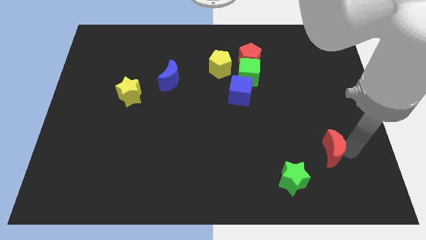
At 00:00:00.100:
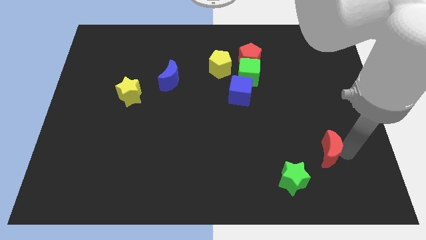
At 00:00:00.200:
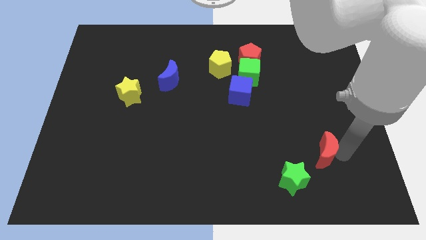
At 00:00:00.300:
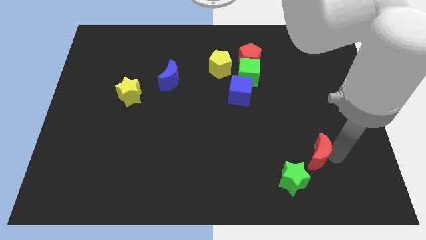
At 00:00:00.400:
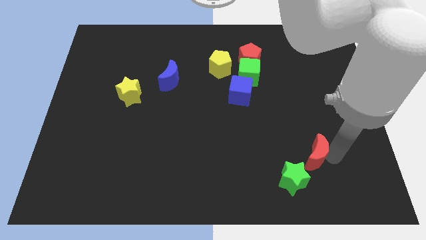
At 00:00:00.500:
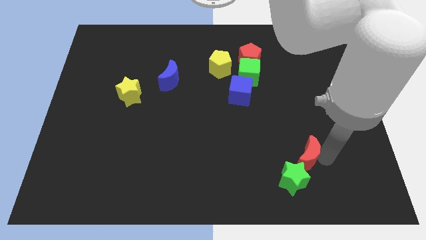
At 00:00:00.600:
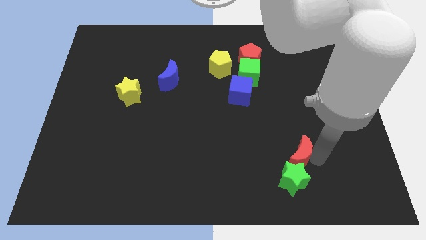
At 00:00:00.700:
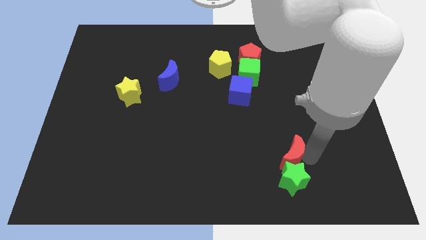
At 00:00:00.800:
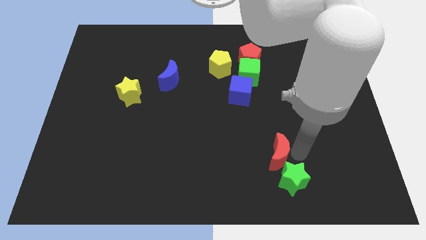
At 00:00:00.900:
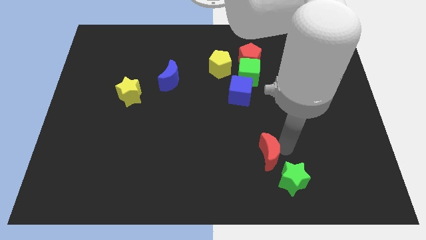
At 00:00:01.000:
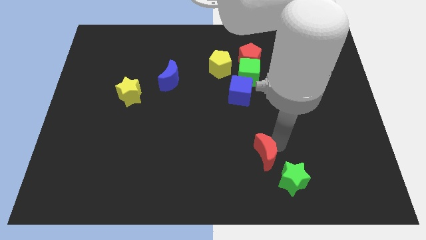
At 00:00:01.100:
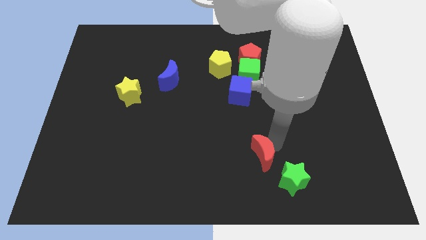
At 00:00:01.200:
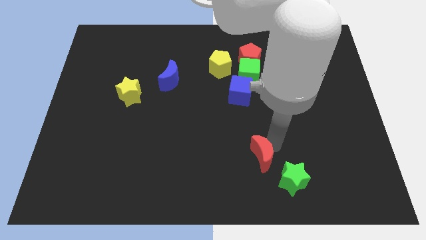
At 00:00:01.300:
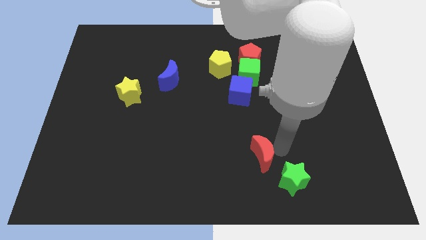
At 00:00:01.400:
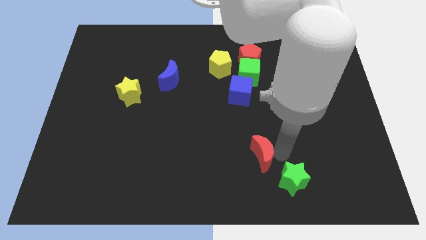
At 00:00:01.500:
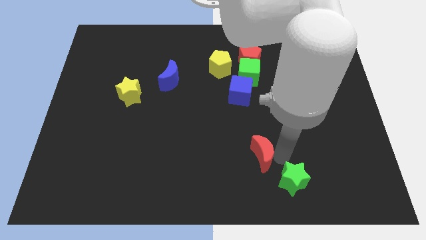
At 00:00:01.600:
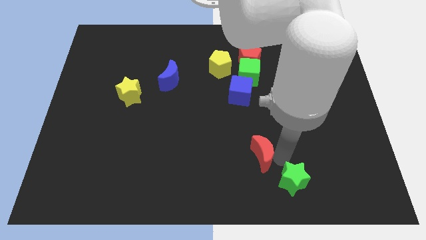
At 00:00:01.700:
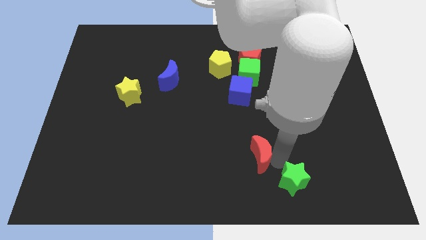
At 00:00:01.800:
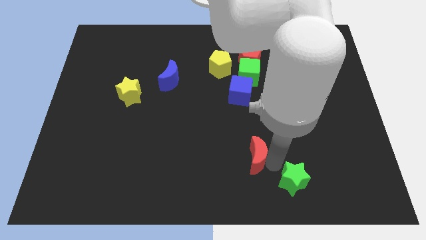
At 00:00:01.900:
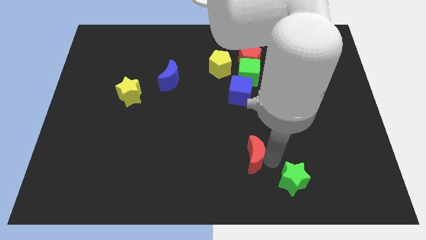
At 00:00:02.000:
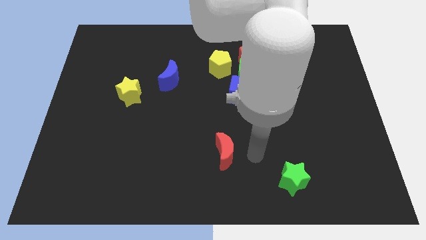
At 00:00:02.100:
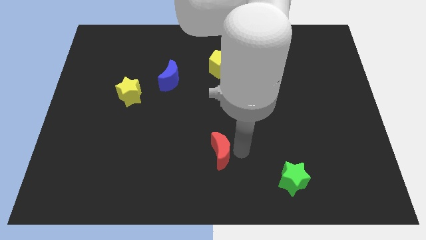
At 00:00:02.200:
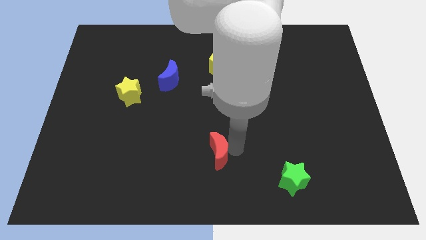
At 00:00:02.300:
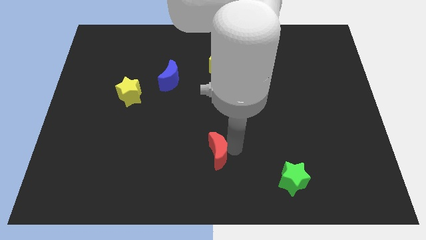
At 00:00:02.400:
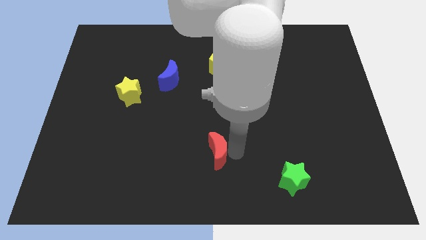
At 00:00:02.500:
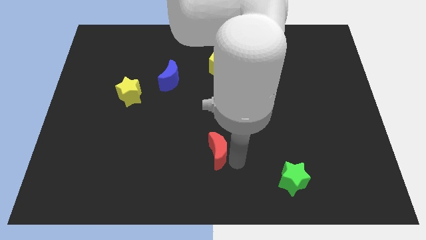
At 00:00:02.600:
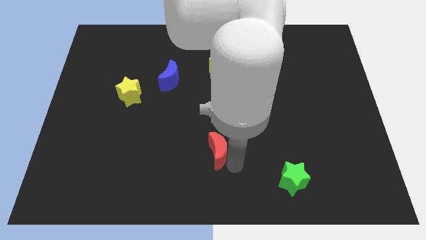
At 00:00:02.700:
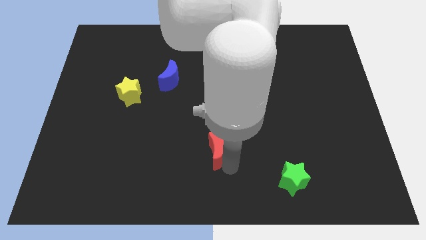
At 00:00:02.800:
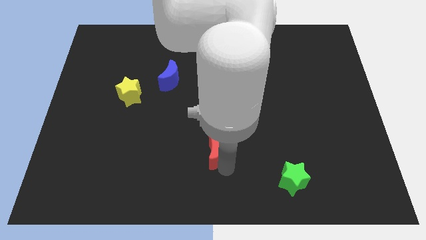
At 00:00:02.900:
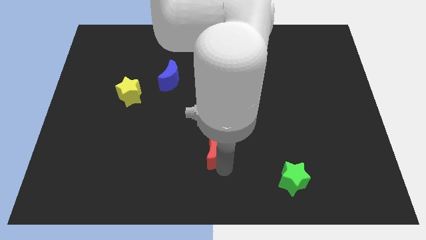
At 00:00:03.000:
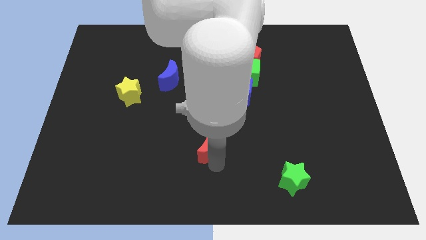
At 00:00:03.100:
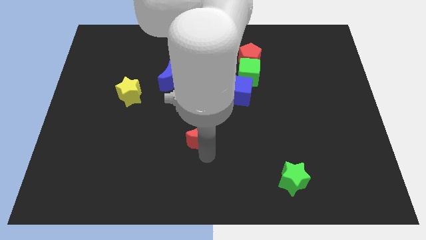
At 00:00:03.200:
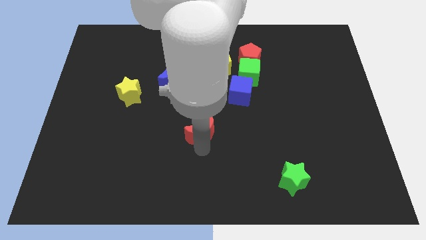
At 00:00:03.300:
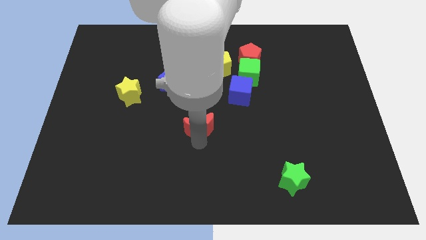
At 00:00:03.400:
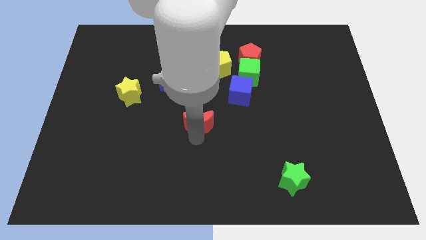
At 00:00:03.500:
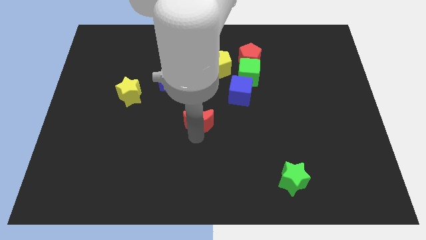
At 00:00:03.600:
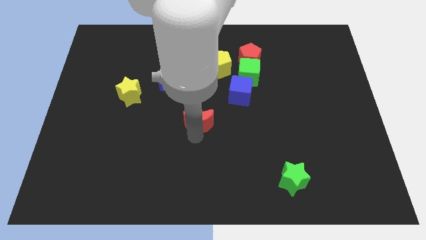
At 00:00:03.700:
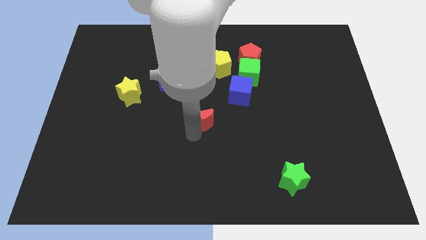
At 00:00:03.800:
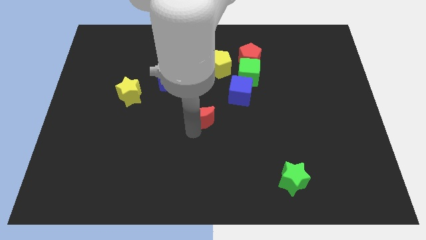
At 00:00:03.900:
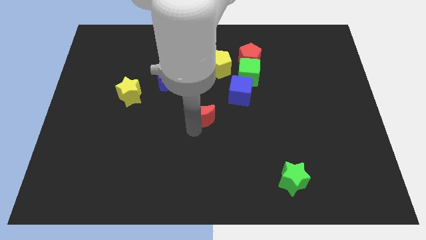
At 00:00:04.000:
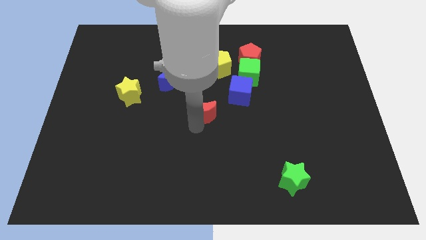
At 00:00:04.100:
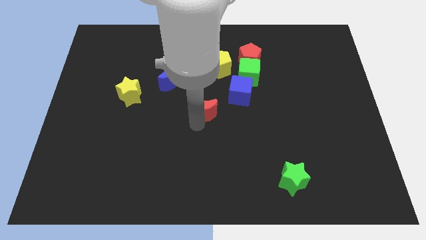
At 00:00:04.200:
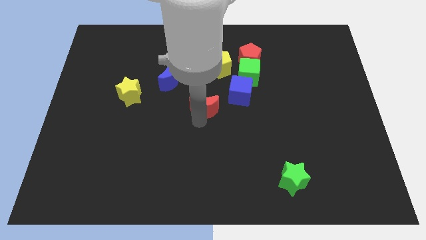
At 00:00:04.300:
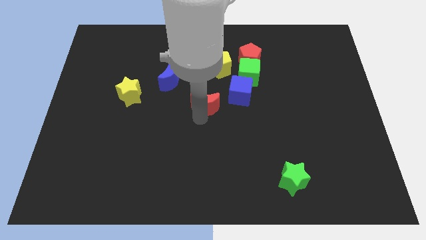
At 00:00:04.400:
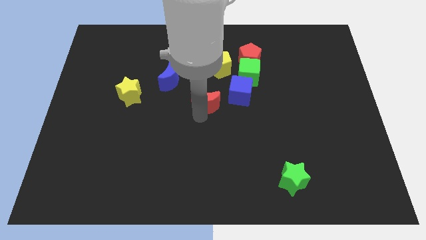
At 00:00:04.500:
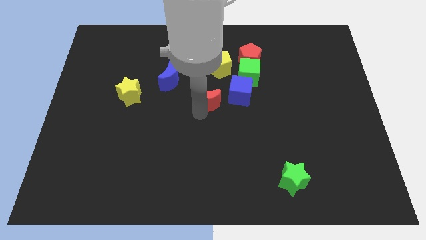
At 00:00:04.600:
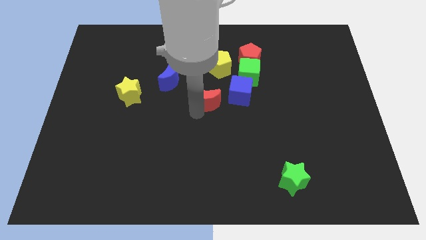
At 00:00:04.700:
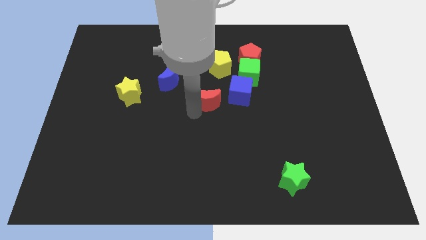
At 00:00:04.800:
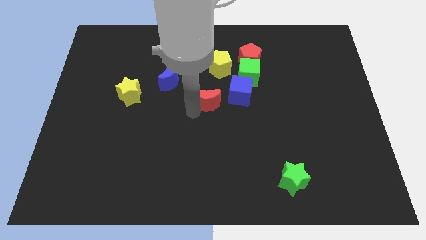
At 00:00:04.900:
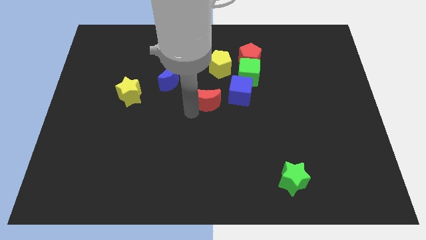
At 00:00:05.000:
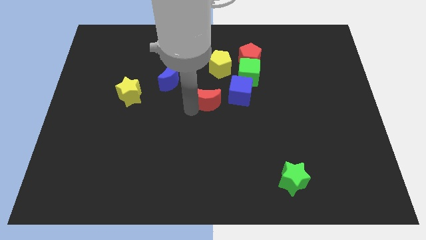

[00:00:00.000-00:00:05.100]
place the red moon below the yellow pentagon

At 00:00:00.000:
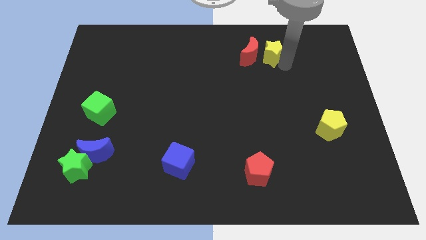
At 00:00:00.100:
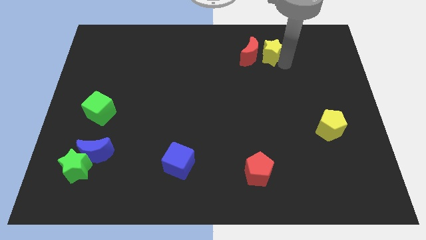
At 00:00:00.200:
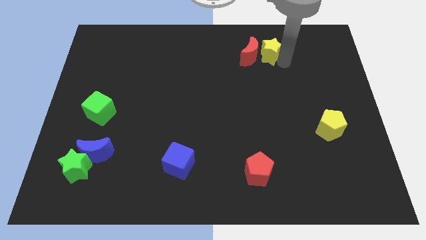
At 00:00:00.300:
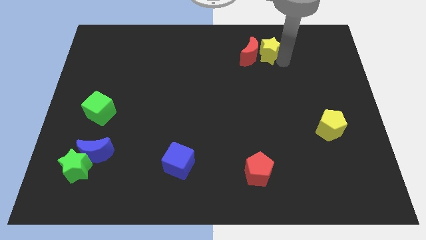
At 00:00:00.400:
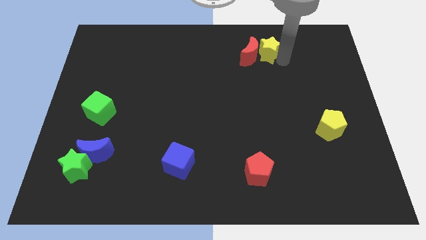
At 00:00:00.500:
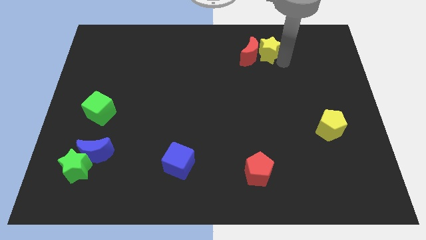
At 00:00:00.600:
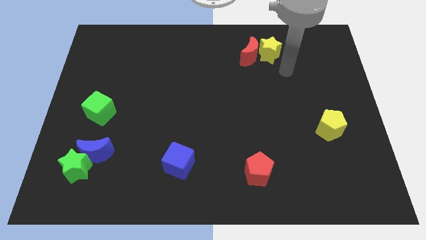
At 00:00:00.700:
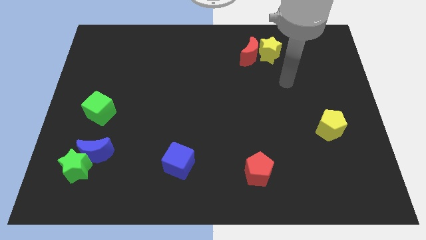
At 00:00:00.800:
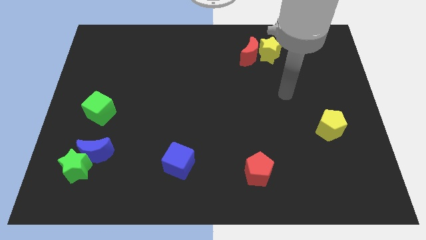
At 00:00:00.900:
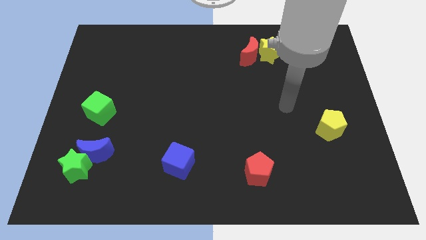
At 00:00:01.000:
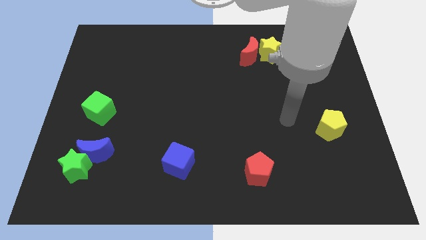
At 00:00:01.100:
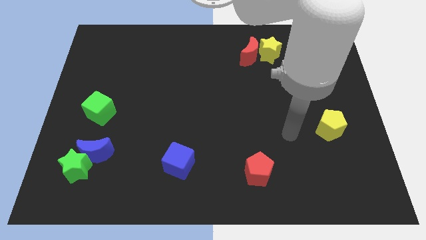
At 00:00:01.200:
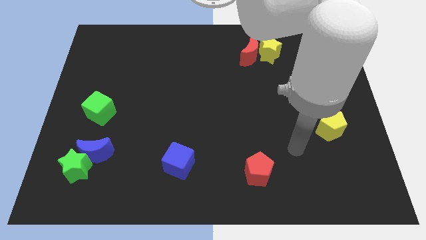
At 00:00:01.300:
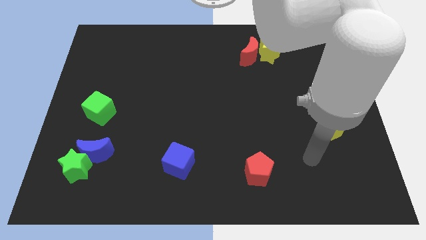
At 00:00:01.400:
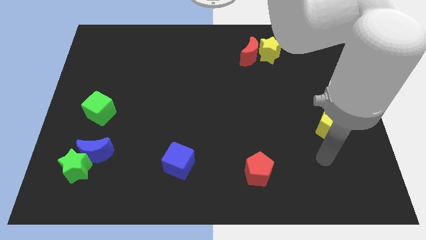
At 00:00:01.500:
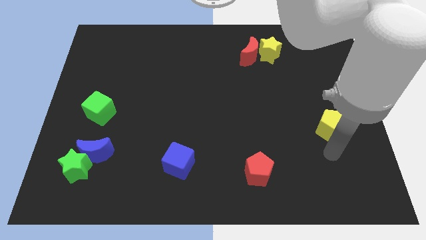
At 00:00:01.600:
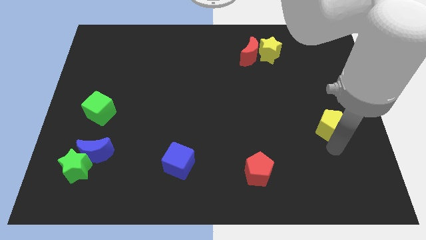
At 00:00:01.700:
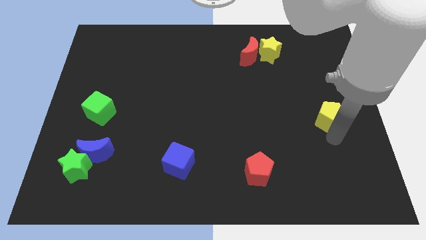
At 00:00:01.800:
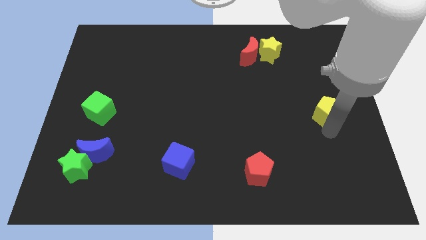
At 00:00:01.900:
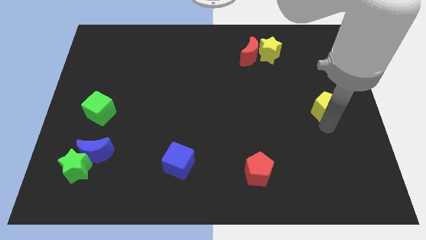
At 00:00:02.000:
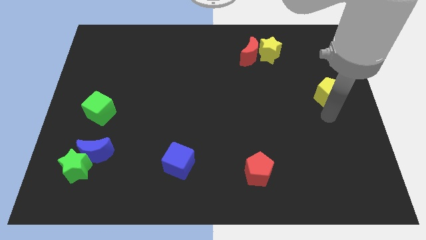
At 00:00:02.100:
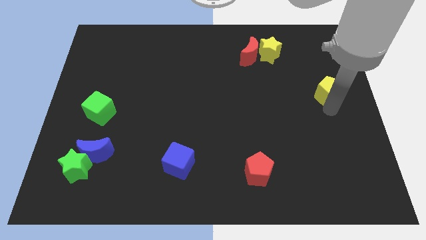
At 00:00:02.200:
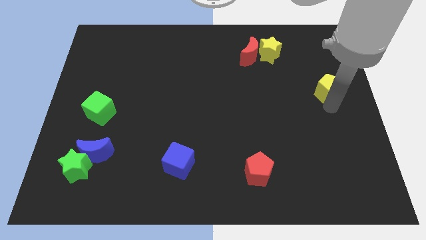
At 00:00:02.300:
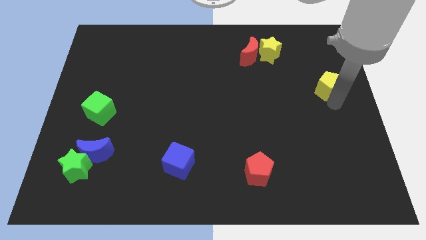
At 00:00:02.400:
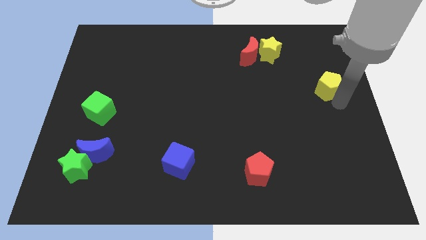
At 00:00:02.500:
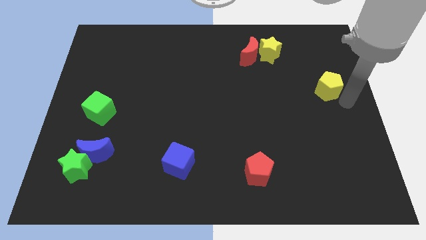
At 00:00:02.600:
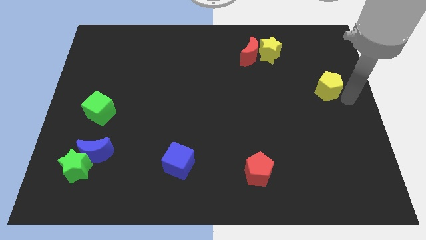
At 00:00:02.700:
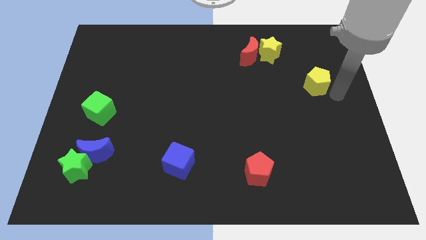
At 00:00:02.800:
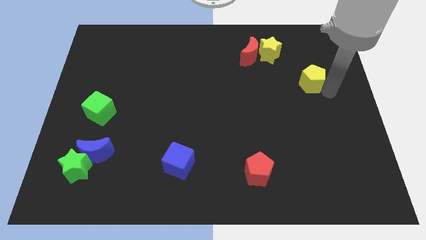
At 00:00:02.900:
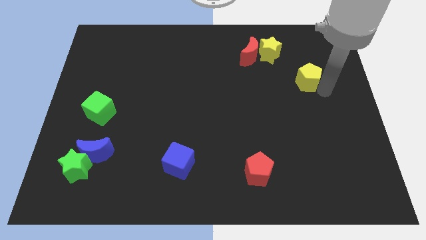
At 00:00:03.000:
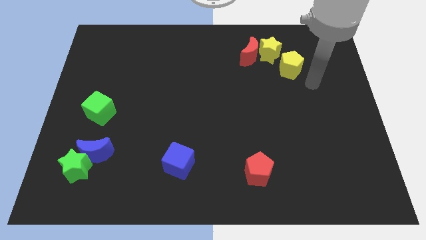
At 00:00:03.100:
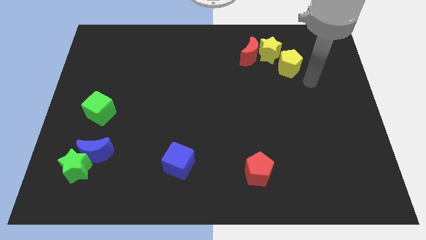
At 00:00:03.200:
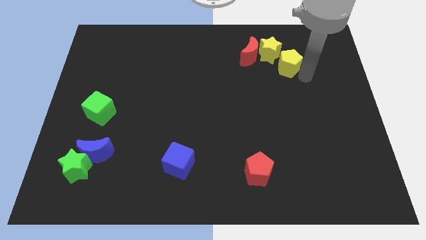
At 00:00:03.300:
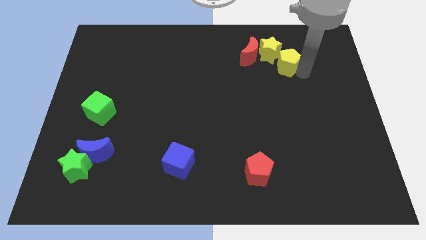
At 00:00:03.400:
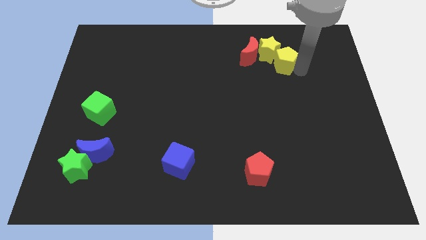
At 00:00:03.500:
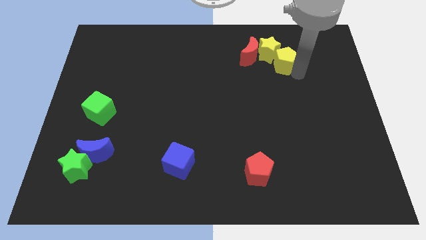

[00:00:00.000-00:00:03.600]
place the yellow pentagon towards the bottom right side of the yellow star
